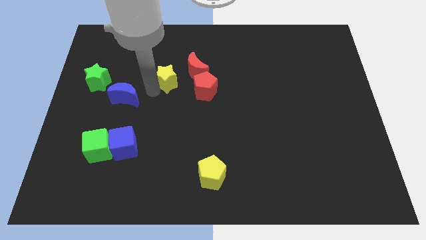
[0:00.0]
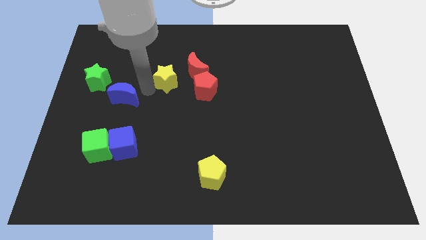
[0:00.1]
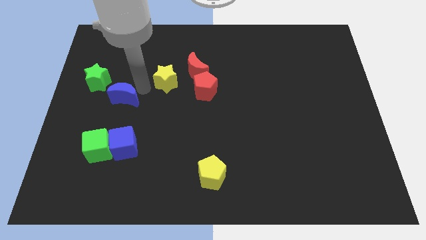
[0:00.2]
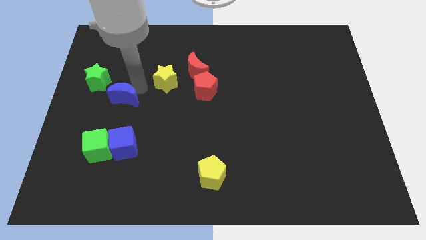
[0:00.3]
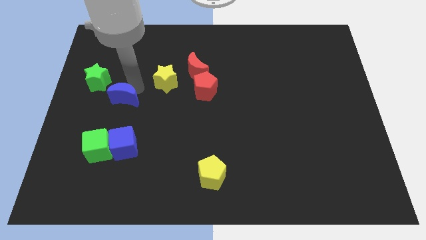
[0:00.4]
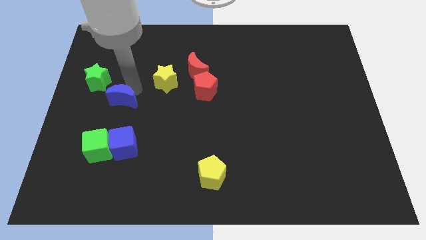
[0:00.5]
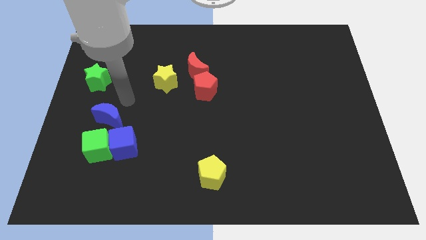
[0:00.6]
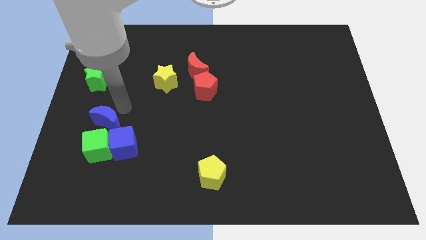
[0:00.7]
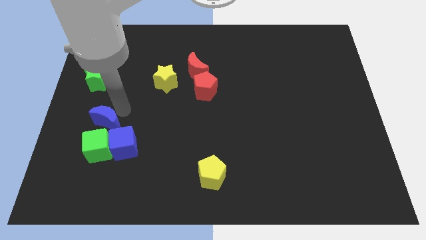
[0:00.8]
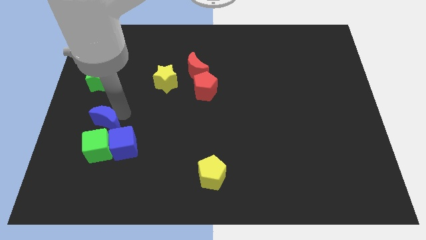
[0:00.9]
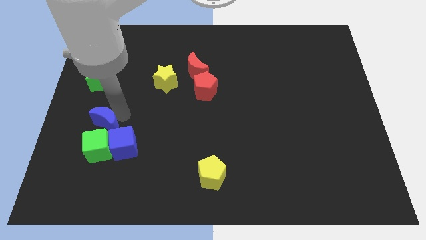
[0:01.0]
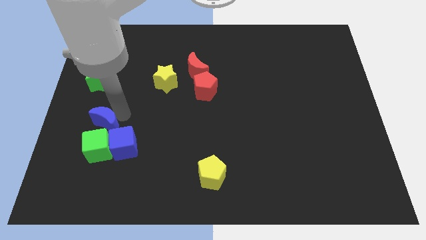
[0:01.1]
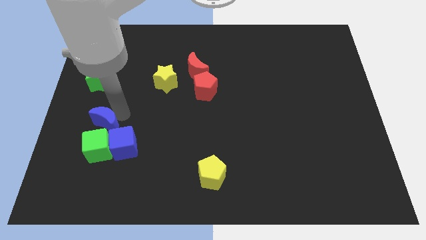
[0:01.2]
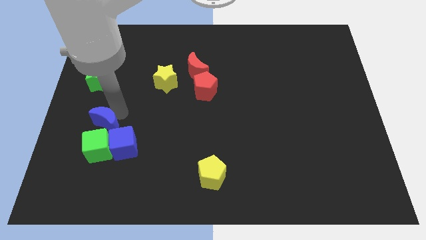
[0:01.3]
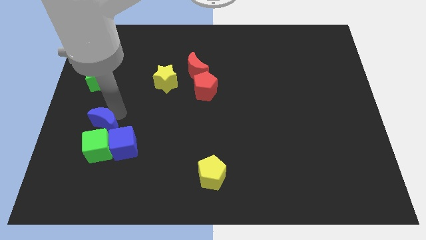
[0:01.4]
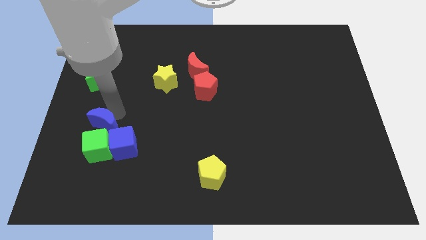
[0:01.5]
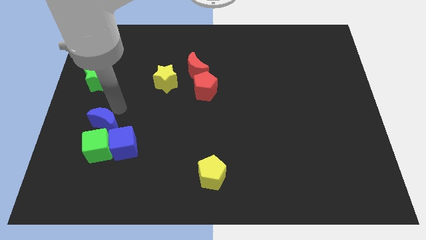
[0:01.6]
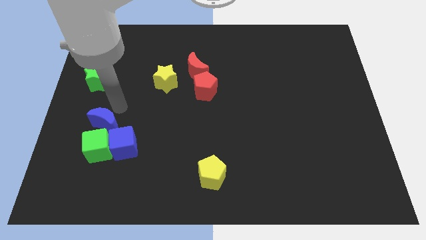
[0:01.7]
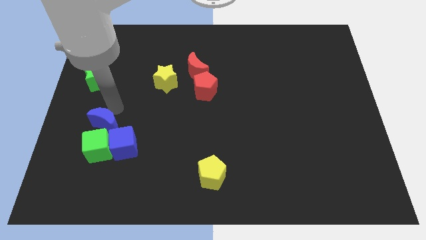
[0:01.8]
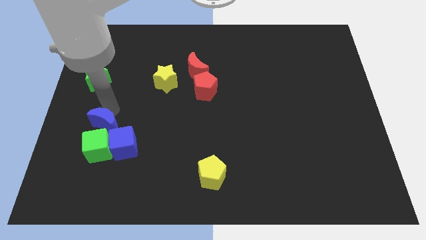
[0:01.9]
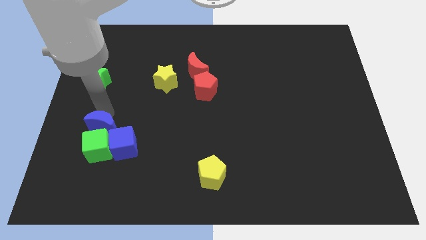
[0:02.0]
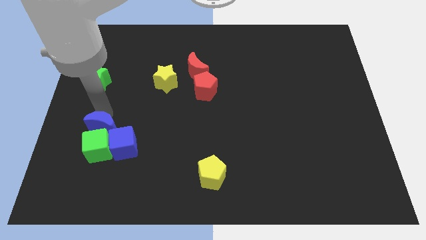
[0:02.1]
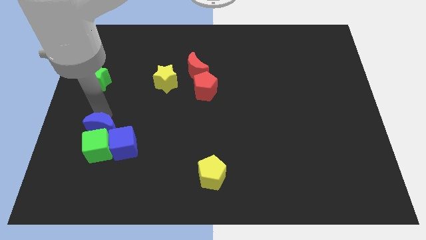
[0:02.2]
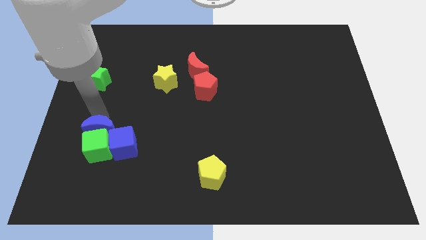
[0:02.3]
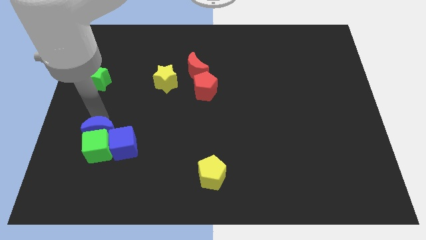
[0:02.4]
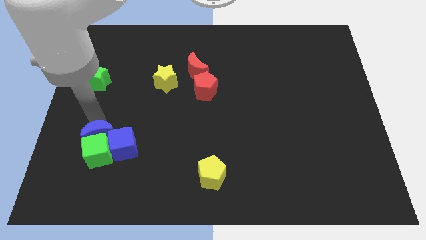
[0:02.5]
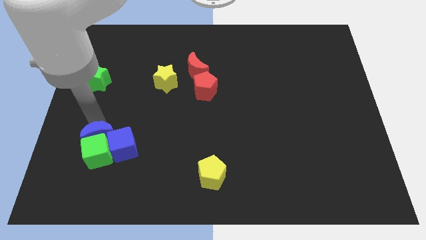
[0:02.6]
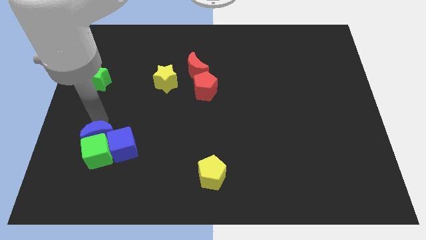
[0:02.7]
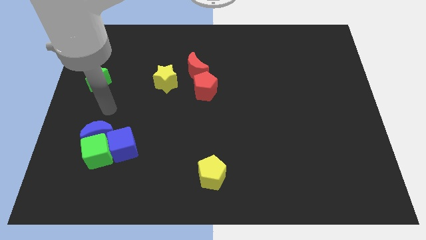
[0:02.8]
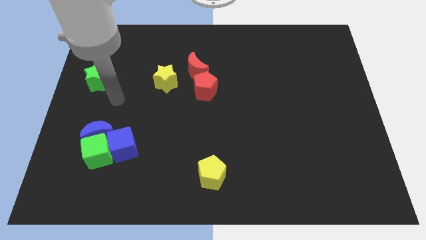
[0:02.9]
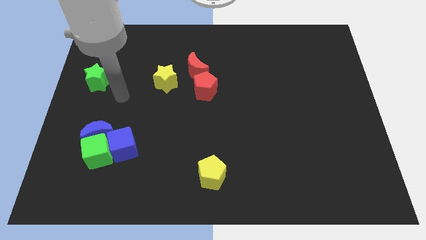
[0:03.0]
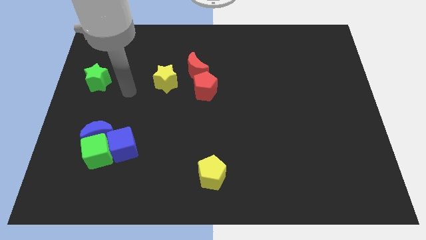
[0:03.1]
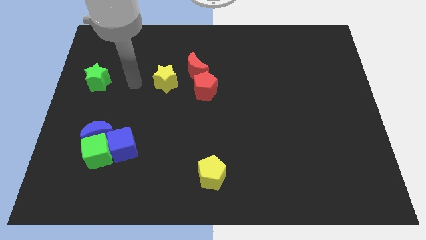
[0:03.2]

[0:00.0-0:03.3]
place the blue crescent above the green cube

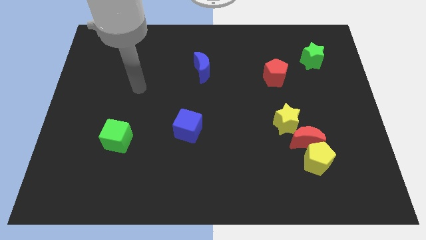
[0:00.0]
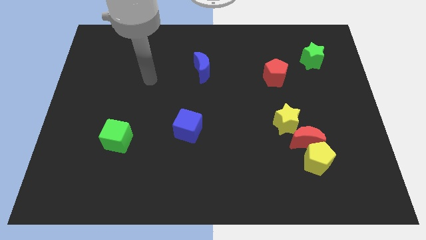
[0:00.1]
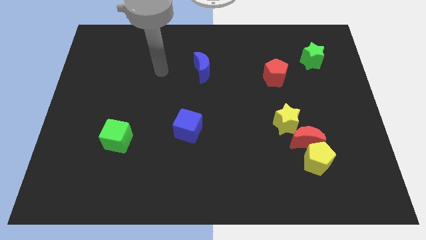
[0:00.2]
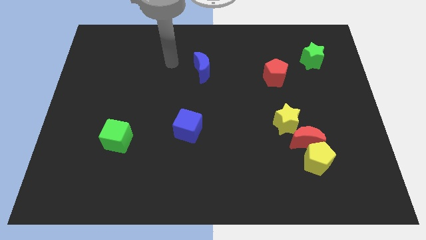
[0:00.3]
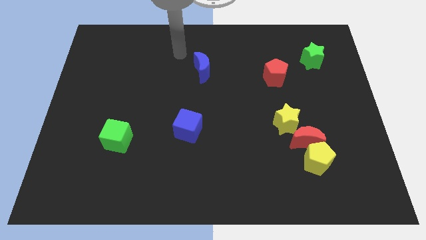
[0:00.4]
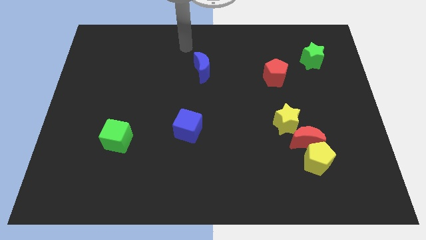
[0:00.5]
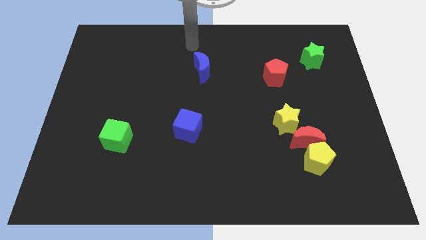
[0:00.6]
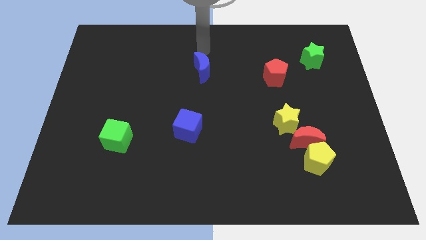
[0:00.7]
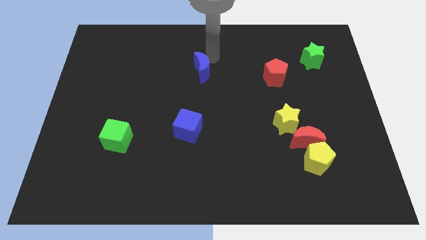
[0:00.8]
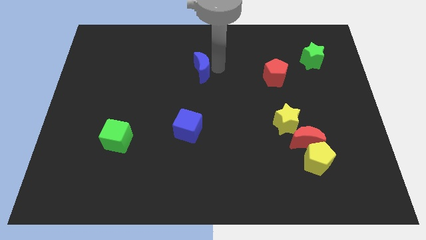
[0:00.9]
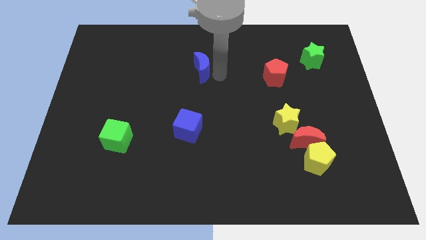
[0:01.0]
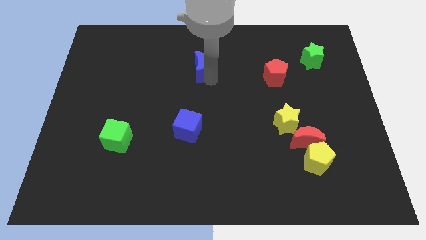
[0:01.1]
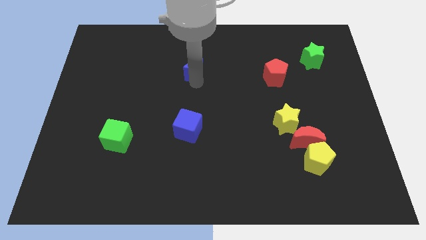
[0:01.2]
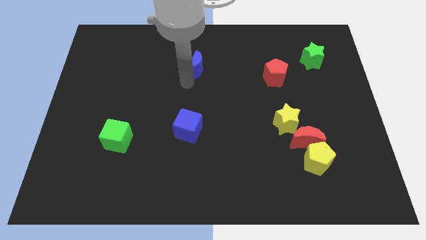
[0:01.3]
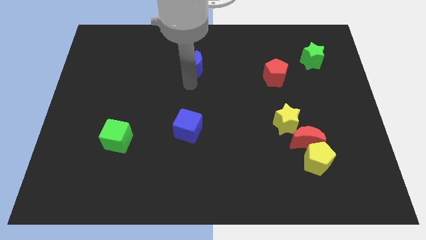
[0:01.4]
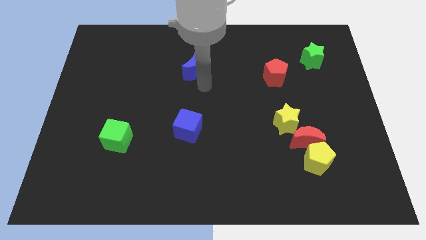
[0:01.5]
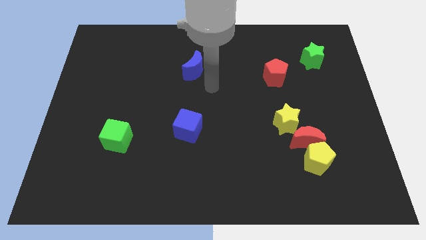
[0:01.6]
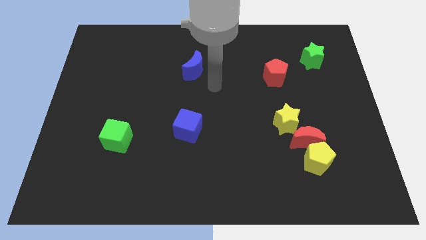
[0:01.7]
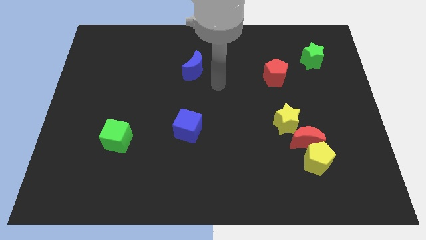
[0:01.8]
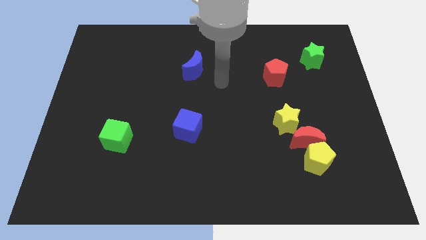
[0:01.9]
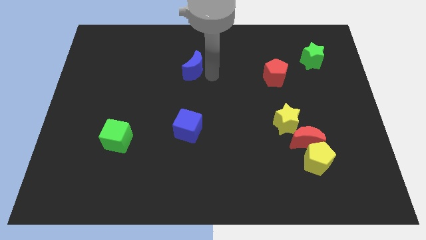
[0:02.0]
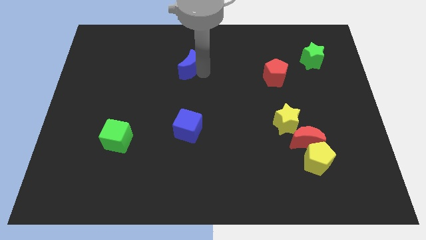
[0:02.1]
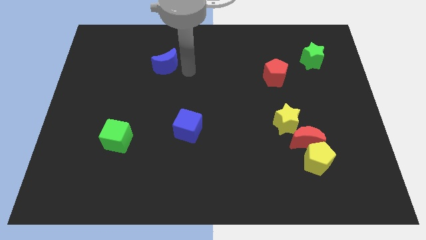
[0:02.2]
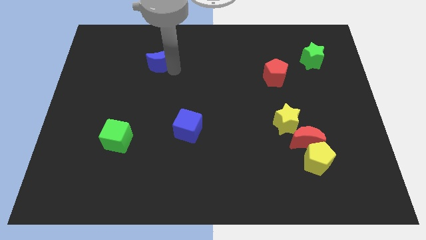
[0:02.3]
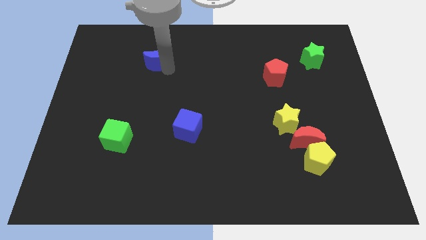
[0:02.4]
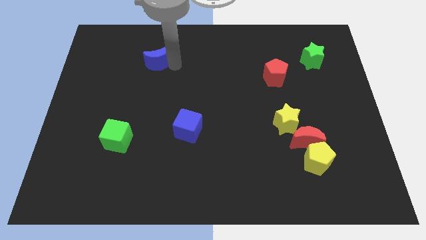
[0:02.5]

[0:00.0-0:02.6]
push the blue crescent towards the top left side of the board

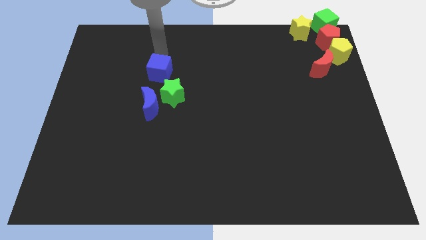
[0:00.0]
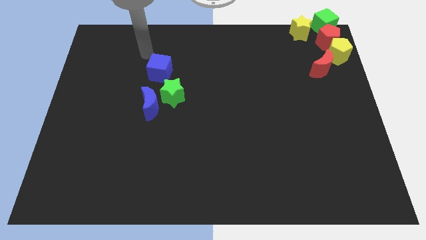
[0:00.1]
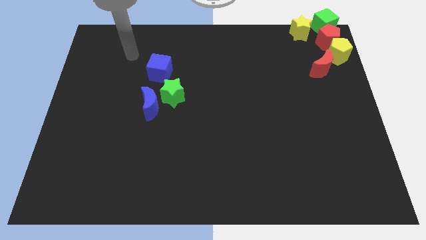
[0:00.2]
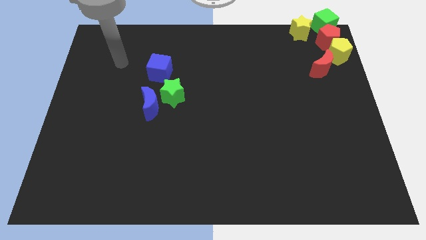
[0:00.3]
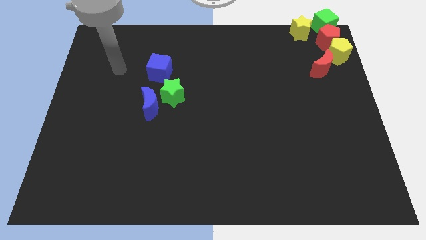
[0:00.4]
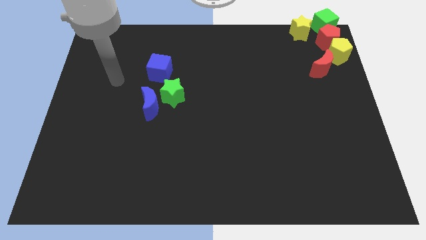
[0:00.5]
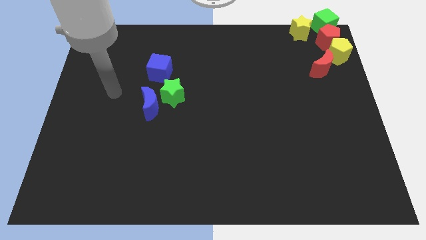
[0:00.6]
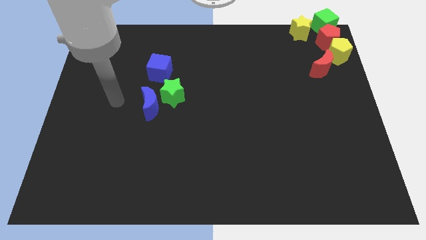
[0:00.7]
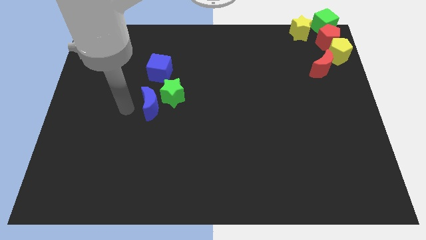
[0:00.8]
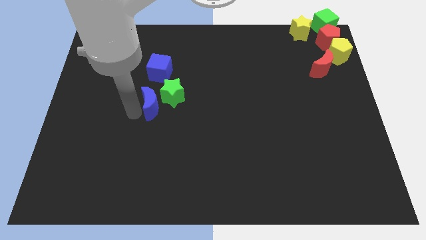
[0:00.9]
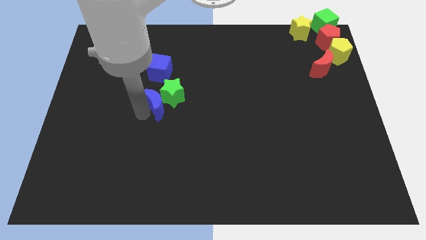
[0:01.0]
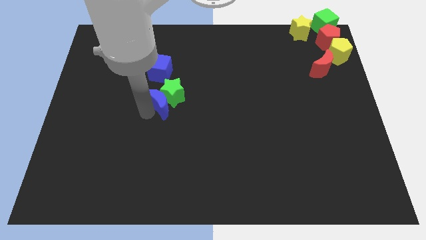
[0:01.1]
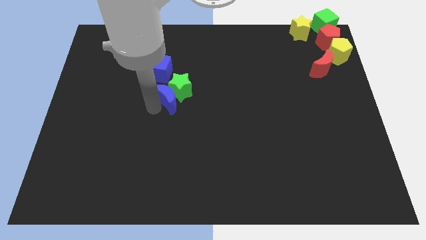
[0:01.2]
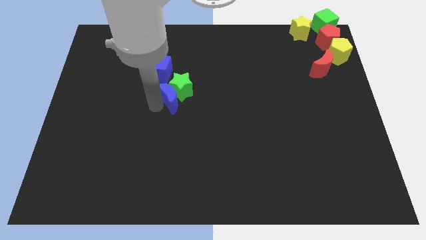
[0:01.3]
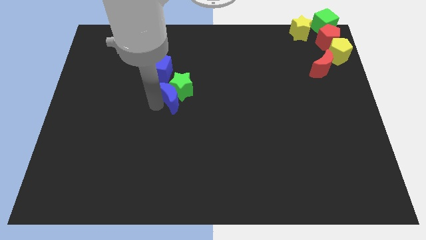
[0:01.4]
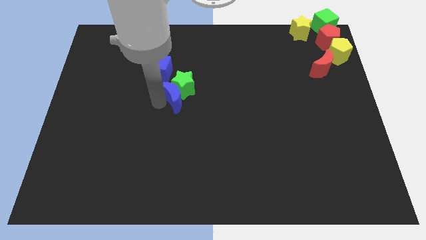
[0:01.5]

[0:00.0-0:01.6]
push blue moon into green star

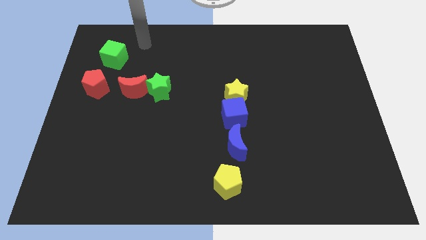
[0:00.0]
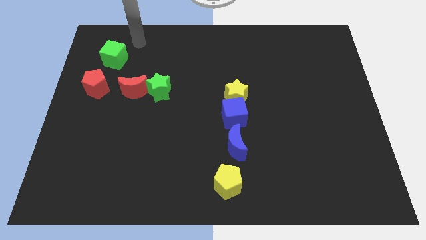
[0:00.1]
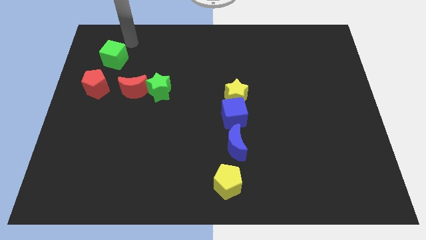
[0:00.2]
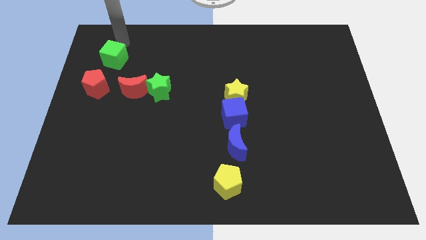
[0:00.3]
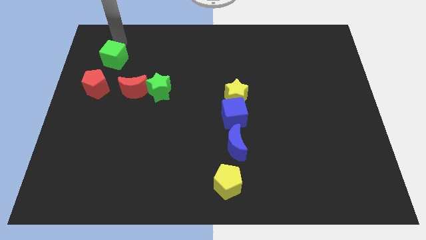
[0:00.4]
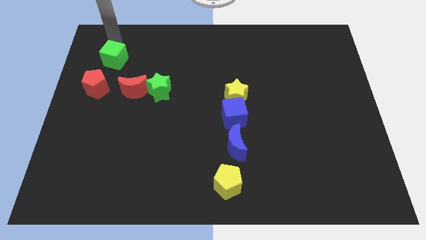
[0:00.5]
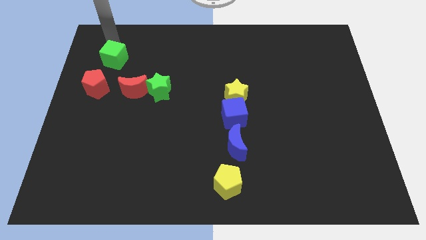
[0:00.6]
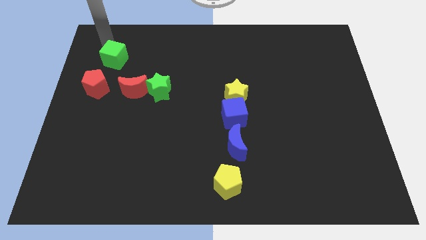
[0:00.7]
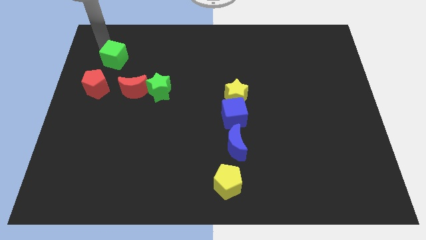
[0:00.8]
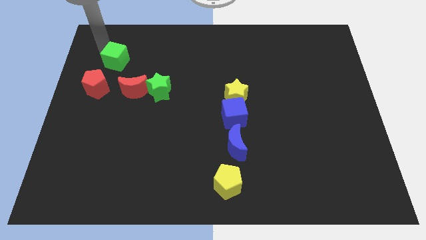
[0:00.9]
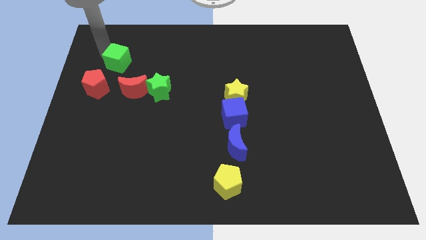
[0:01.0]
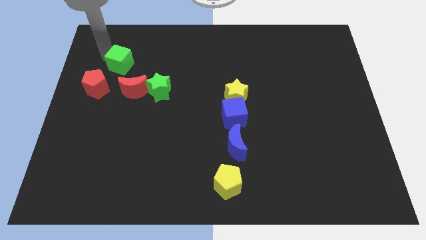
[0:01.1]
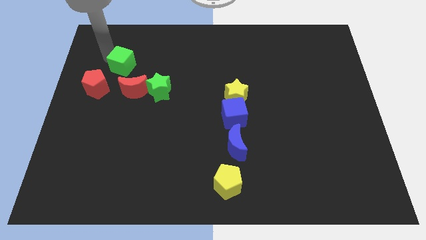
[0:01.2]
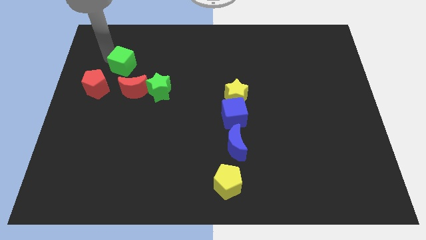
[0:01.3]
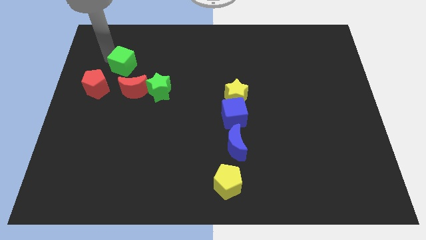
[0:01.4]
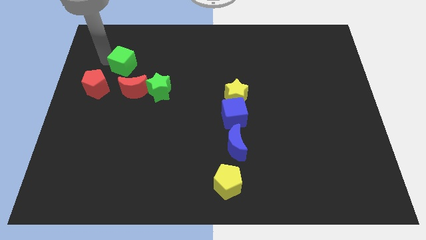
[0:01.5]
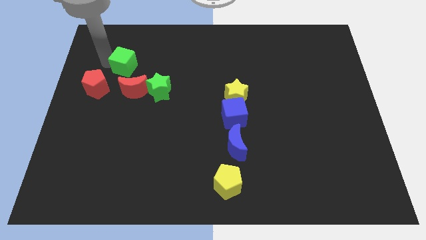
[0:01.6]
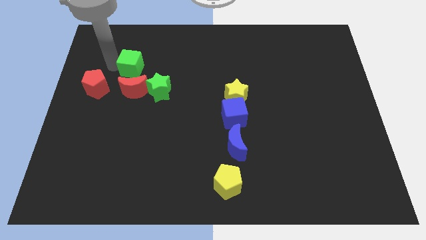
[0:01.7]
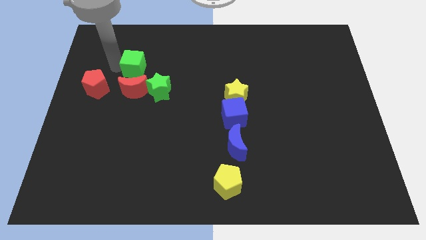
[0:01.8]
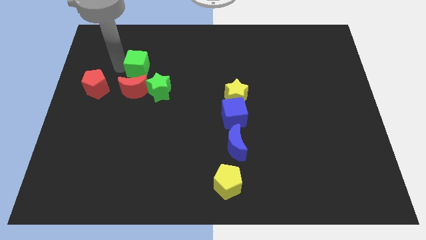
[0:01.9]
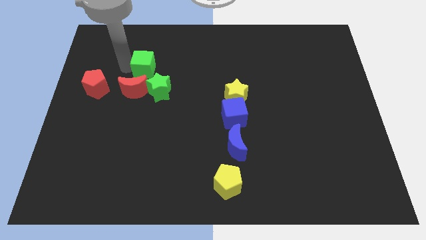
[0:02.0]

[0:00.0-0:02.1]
put the green cube above the red moon
